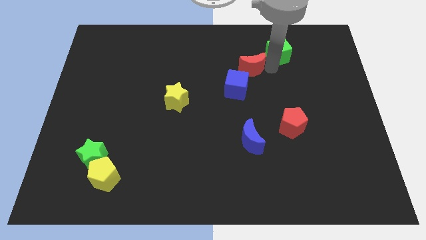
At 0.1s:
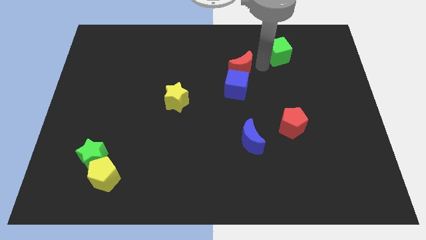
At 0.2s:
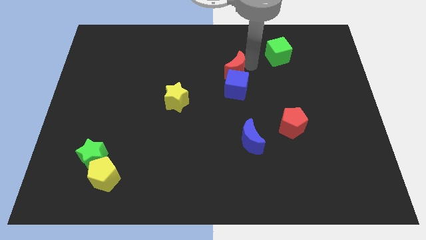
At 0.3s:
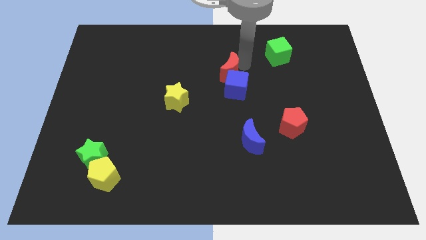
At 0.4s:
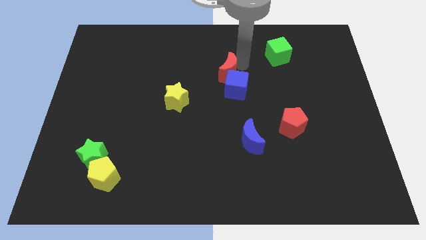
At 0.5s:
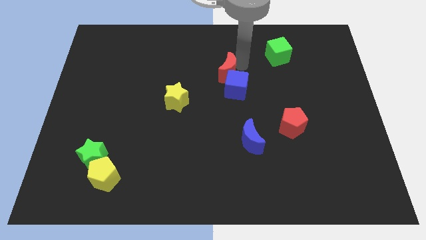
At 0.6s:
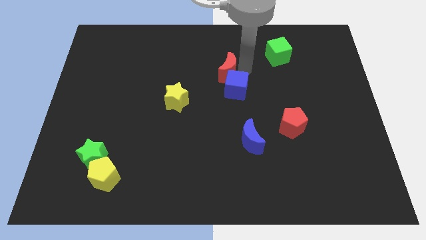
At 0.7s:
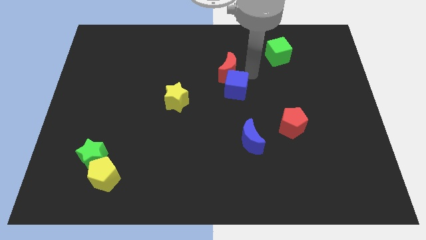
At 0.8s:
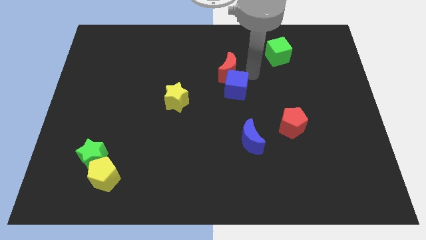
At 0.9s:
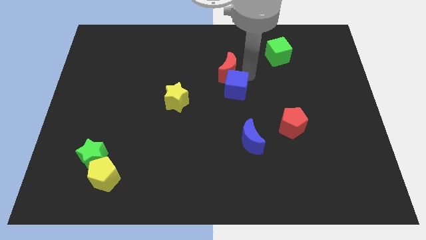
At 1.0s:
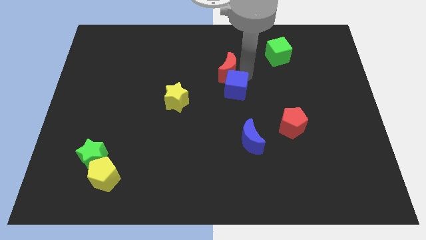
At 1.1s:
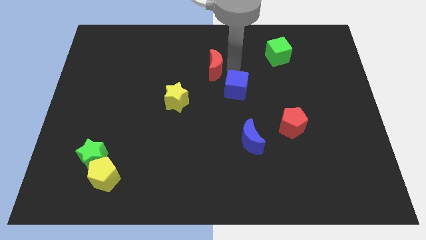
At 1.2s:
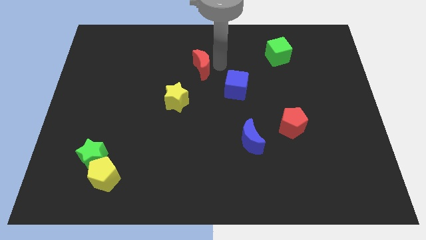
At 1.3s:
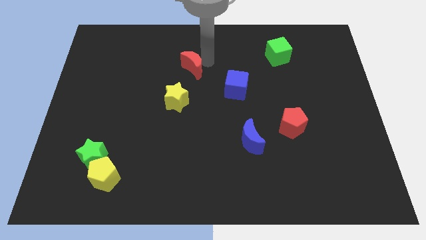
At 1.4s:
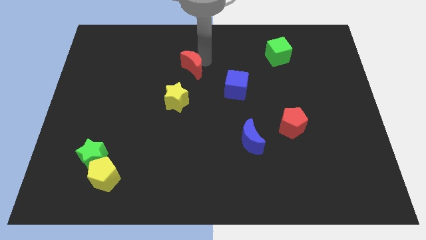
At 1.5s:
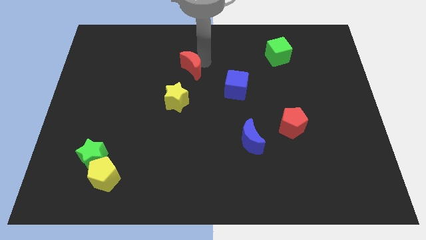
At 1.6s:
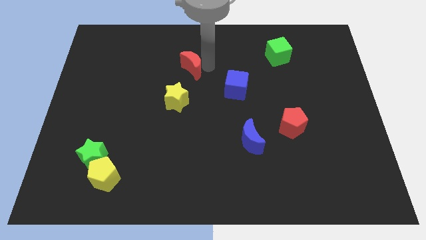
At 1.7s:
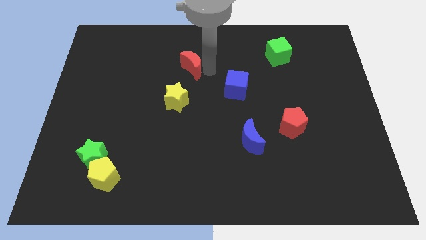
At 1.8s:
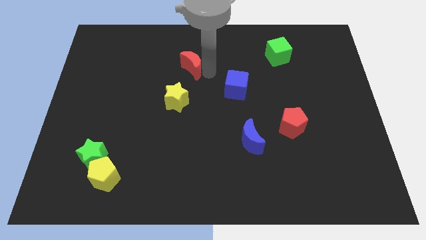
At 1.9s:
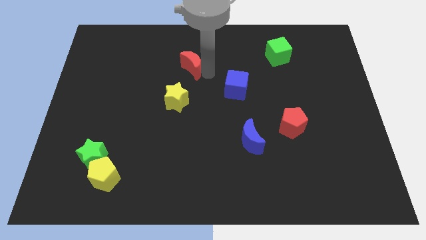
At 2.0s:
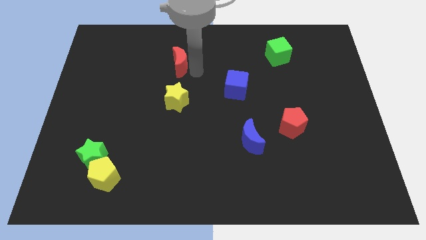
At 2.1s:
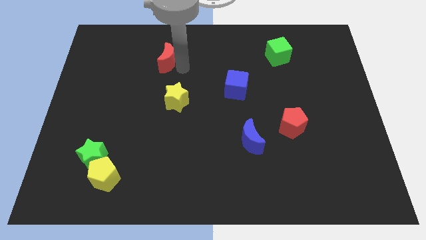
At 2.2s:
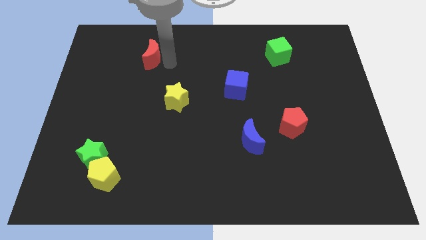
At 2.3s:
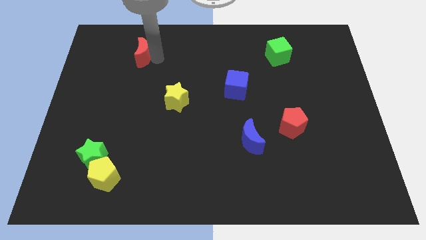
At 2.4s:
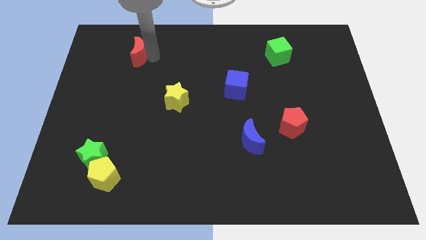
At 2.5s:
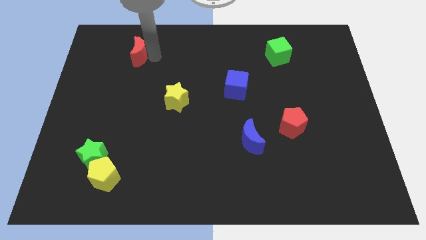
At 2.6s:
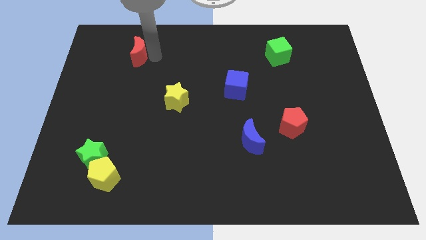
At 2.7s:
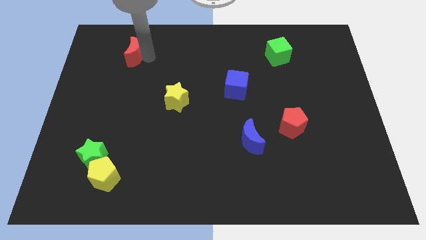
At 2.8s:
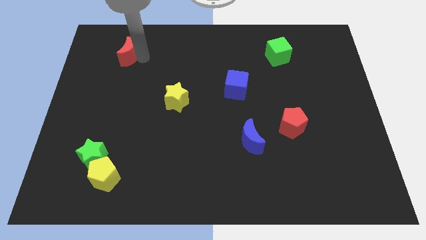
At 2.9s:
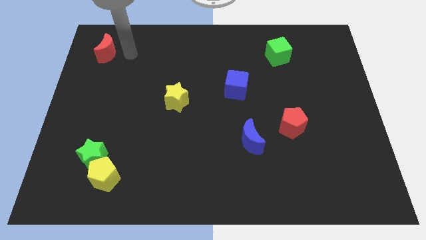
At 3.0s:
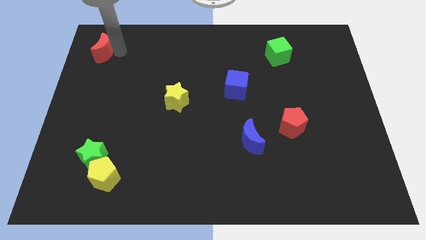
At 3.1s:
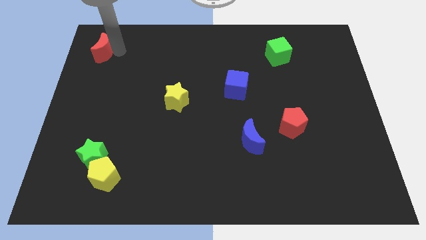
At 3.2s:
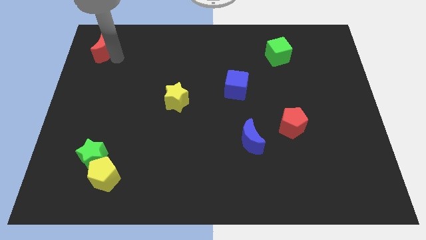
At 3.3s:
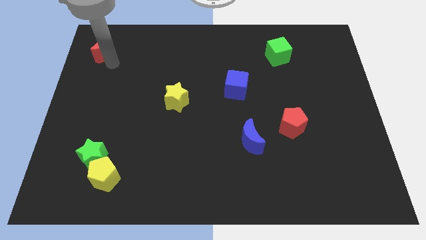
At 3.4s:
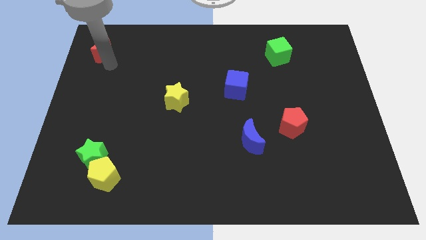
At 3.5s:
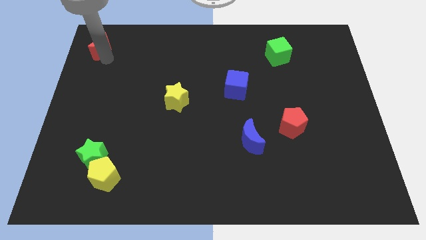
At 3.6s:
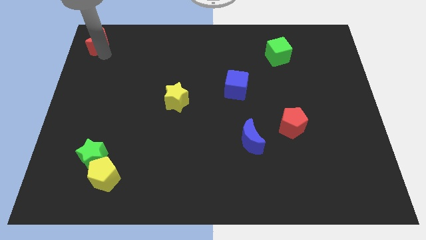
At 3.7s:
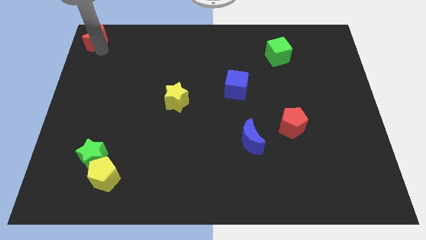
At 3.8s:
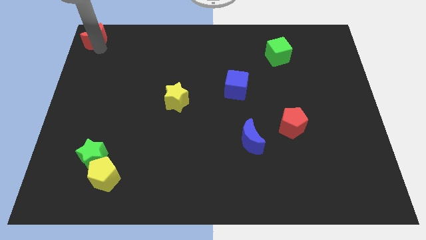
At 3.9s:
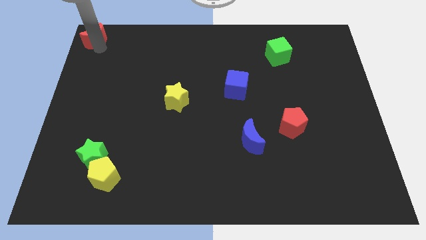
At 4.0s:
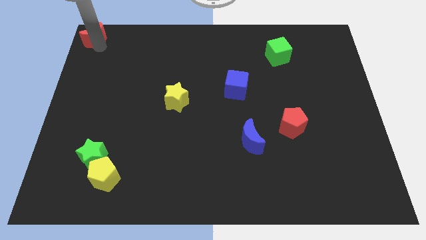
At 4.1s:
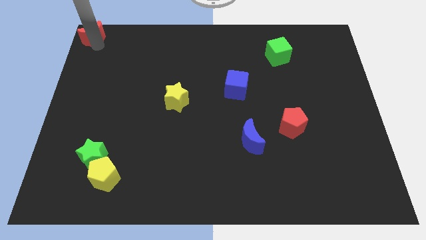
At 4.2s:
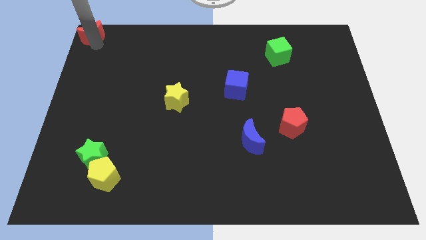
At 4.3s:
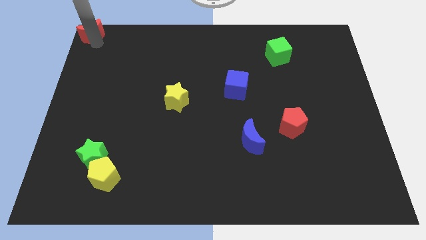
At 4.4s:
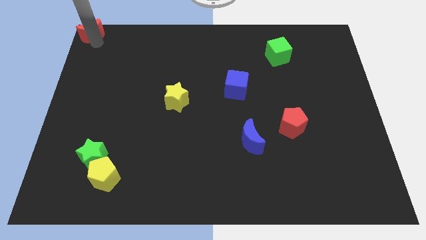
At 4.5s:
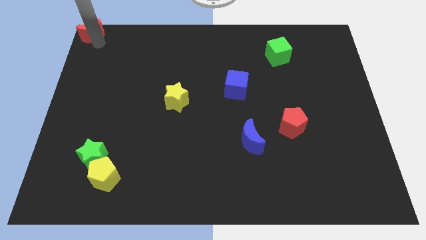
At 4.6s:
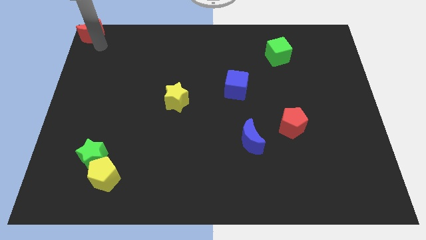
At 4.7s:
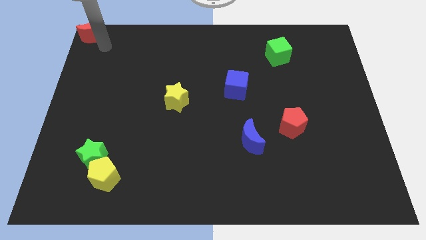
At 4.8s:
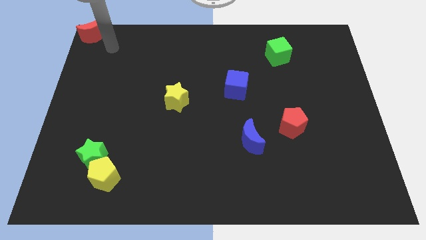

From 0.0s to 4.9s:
push the red crescent towards the top left of the board

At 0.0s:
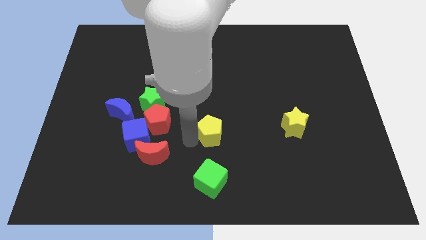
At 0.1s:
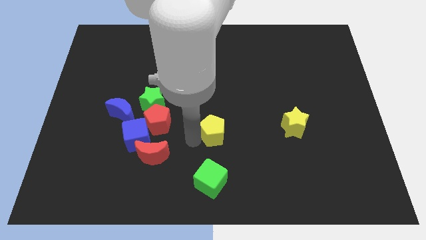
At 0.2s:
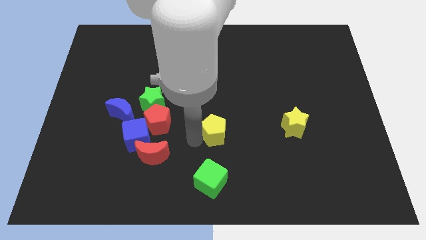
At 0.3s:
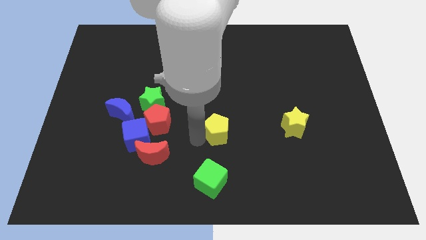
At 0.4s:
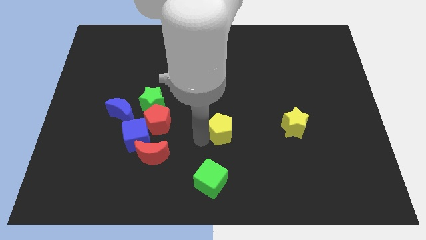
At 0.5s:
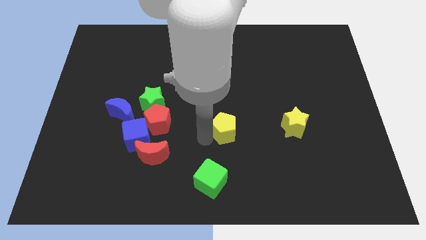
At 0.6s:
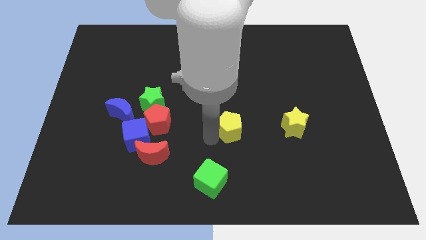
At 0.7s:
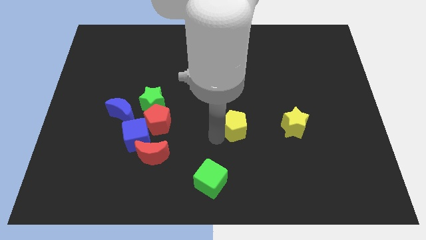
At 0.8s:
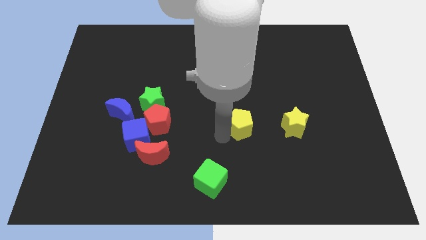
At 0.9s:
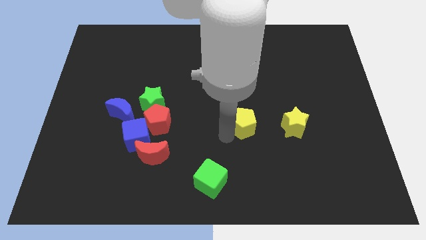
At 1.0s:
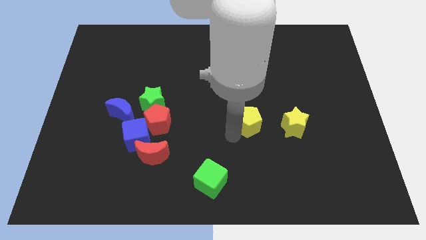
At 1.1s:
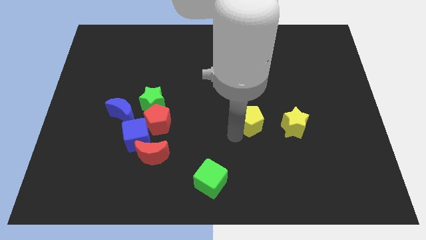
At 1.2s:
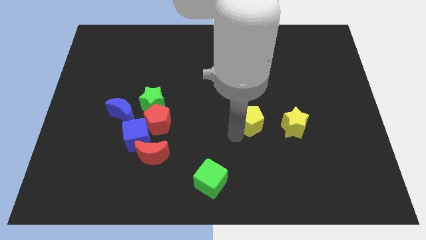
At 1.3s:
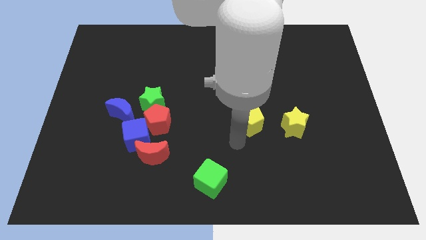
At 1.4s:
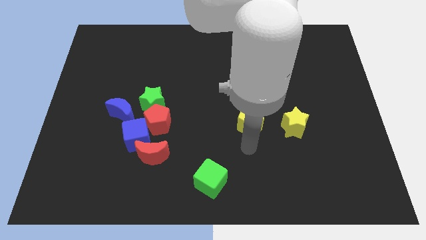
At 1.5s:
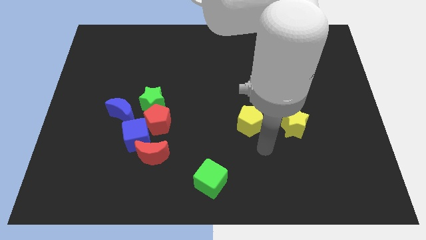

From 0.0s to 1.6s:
move the yellow pentagon left of the yellow star

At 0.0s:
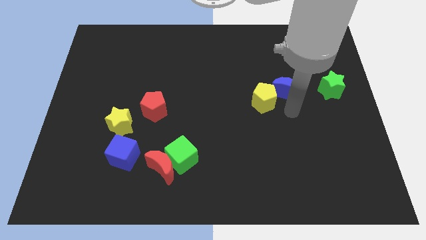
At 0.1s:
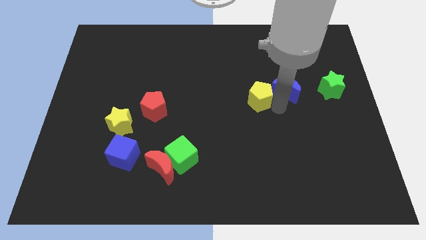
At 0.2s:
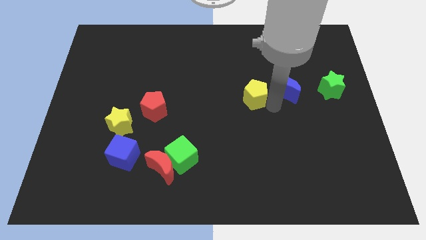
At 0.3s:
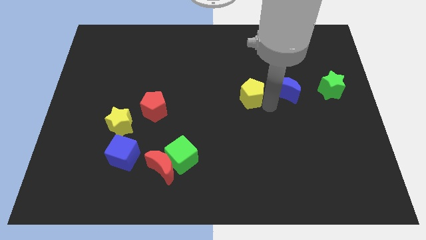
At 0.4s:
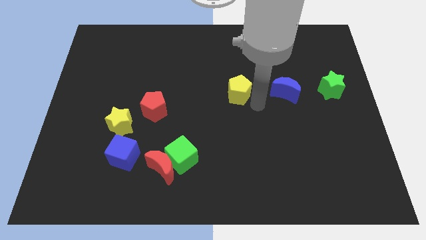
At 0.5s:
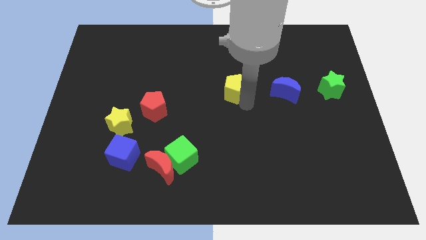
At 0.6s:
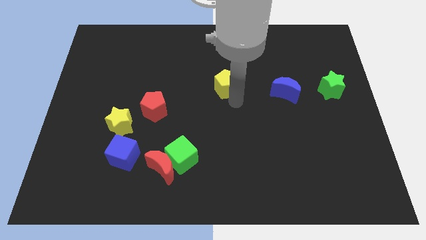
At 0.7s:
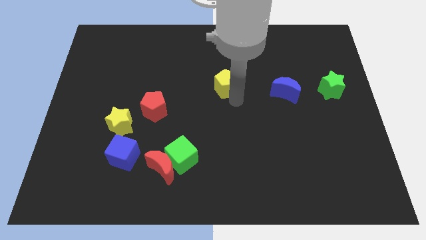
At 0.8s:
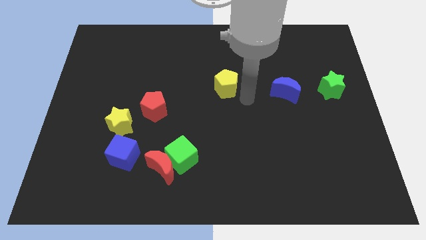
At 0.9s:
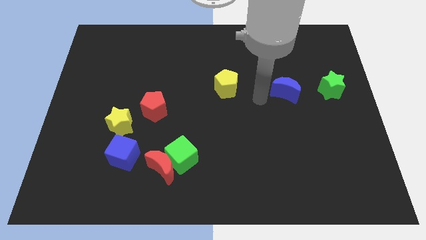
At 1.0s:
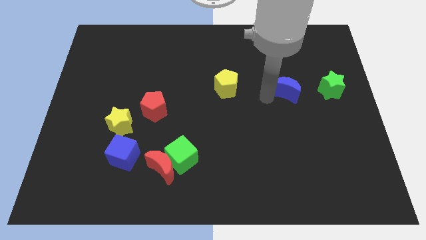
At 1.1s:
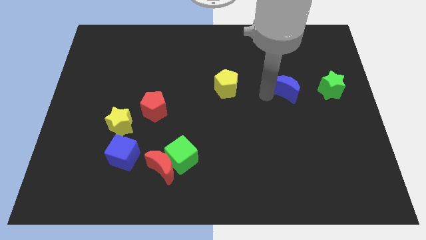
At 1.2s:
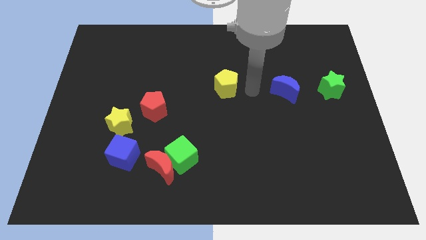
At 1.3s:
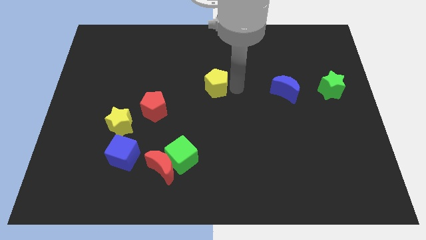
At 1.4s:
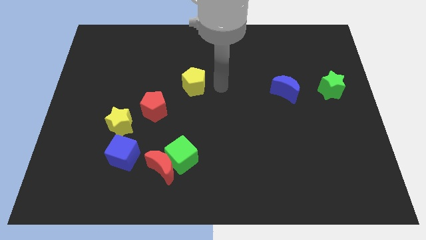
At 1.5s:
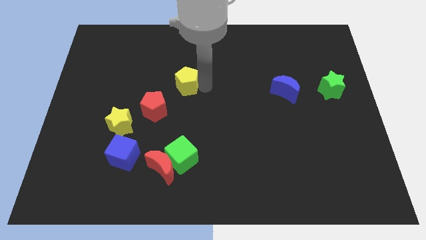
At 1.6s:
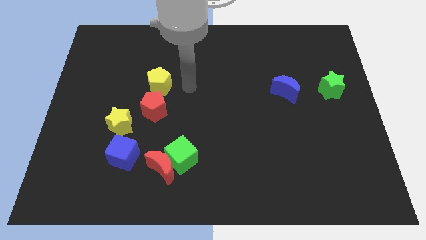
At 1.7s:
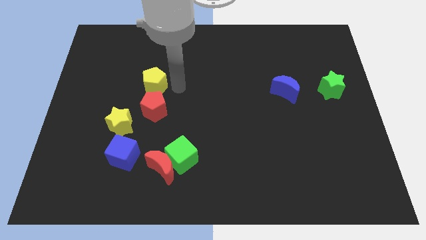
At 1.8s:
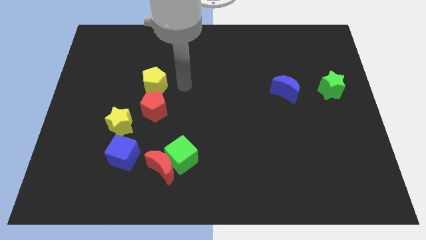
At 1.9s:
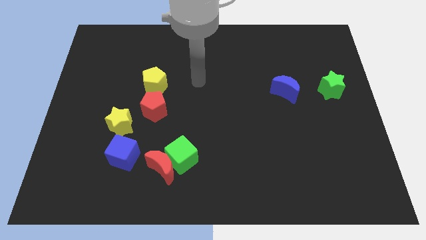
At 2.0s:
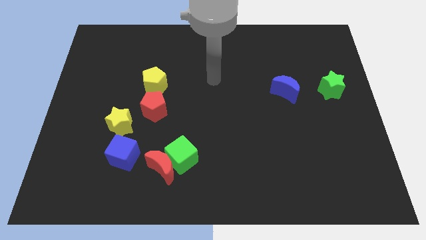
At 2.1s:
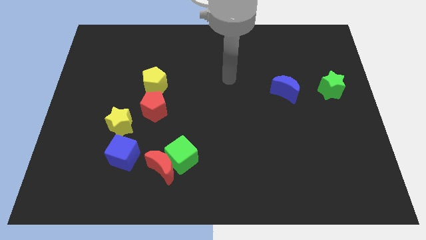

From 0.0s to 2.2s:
move the yellow pentagon to the top of the red pentagon

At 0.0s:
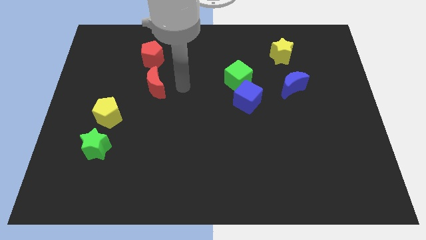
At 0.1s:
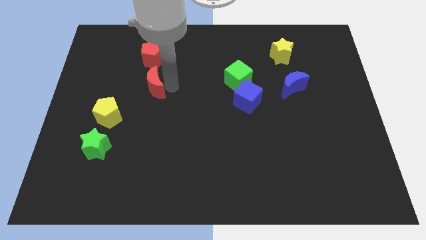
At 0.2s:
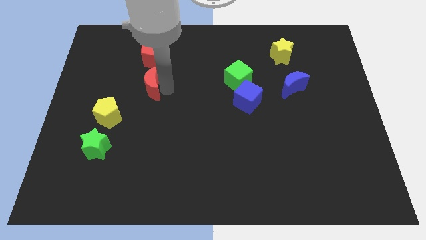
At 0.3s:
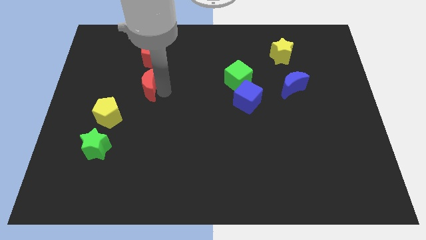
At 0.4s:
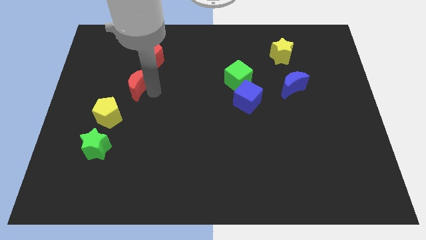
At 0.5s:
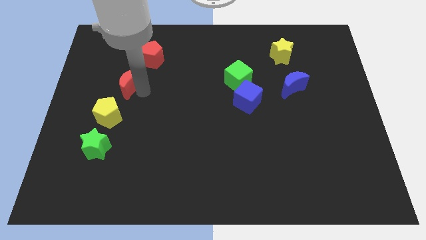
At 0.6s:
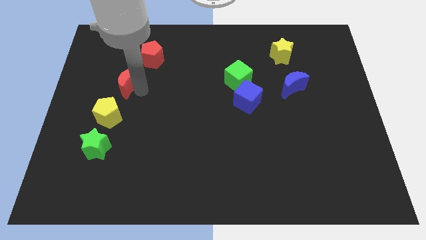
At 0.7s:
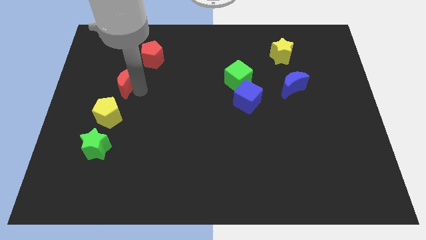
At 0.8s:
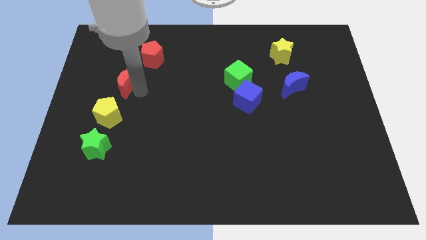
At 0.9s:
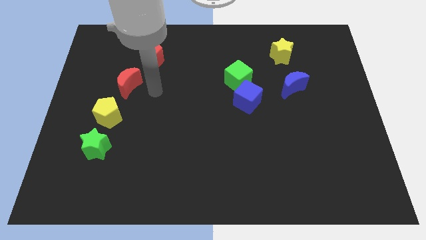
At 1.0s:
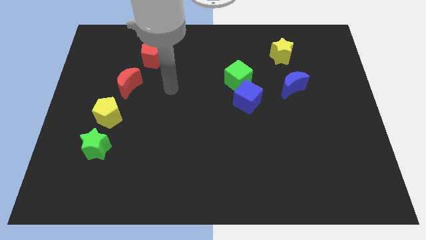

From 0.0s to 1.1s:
place the red moon between red pentagon and yellow pentagon
